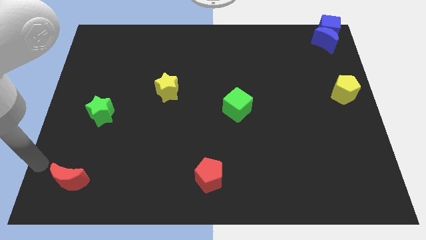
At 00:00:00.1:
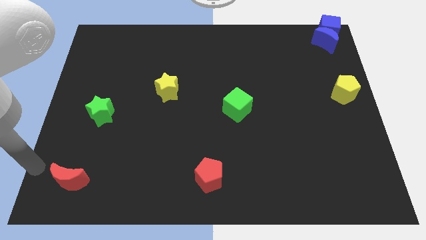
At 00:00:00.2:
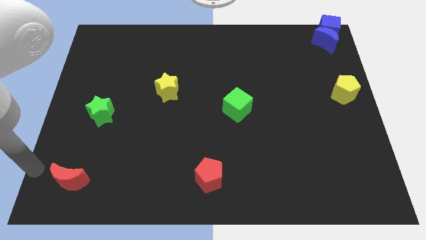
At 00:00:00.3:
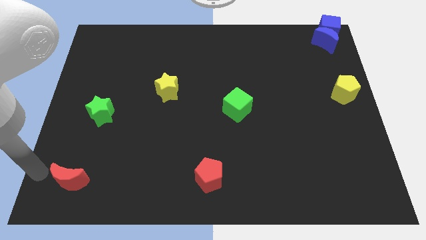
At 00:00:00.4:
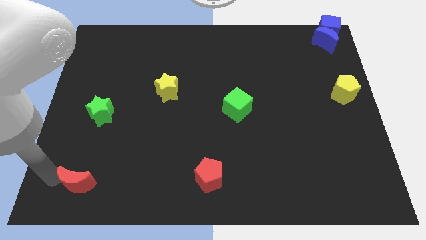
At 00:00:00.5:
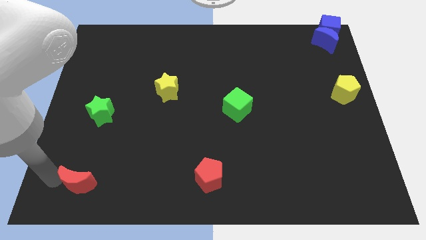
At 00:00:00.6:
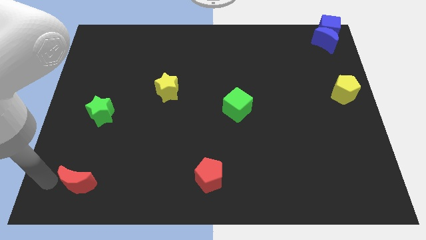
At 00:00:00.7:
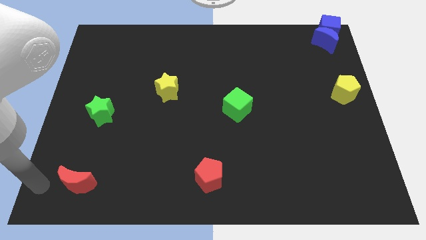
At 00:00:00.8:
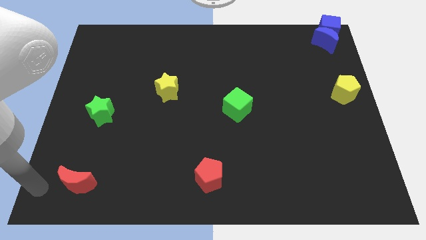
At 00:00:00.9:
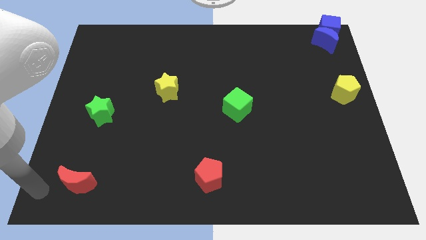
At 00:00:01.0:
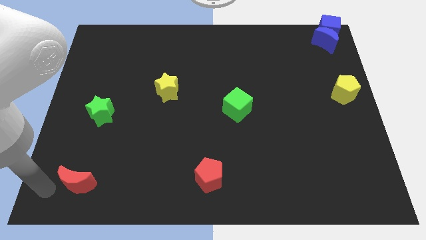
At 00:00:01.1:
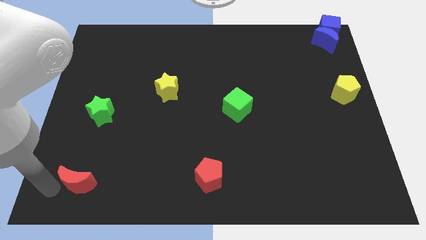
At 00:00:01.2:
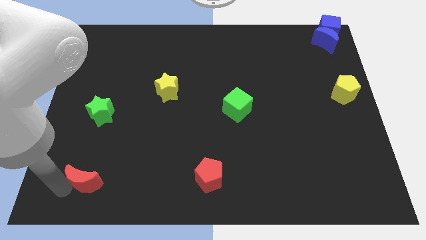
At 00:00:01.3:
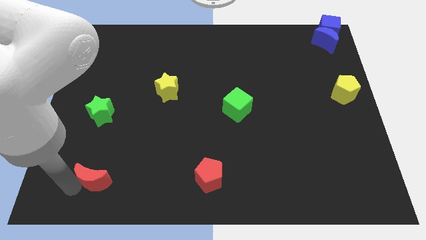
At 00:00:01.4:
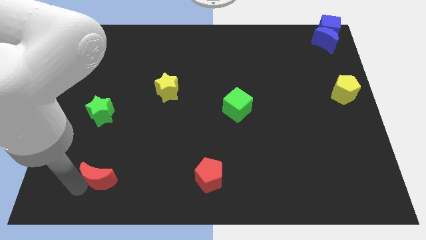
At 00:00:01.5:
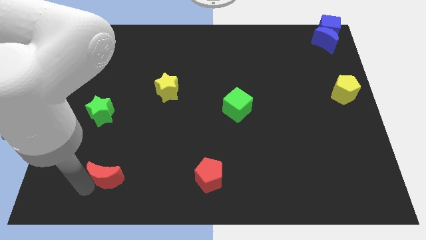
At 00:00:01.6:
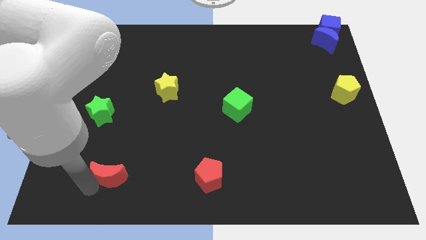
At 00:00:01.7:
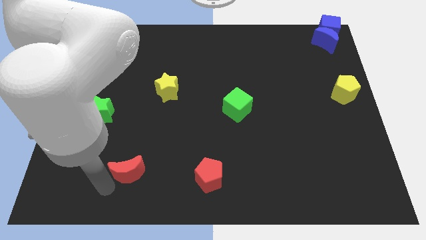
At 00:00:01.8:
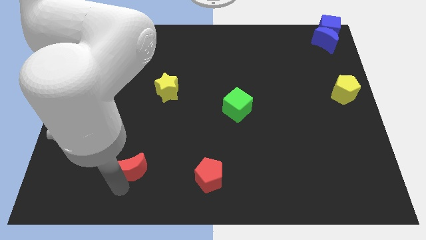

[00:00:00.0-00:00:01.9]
place red moon to the left of red pentagon

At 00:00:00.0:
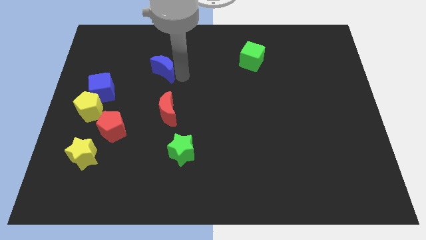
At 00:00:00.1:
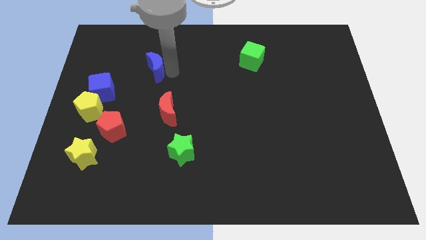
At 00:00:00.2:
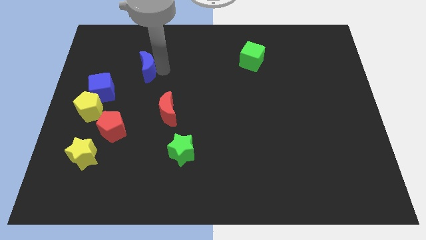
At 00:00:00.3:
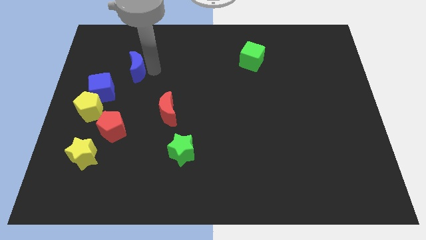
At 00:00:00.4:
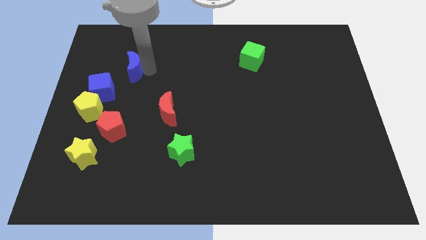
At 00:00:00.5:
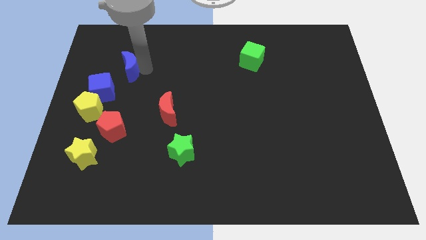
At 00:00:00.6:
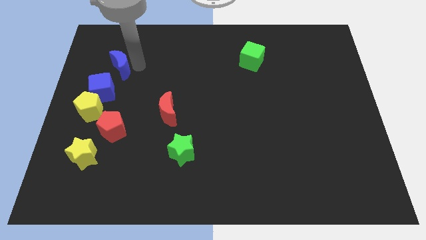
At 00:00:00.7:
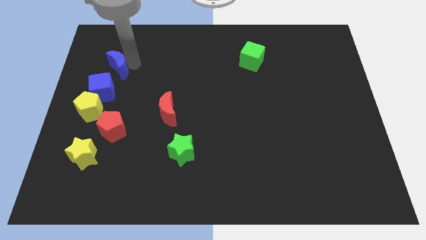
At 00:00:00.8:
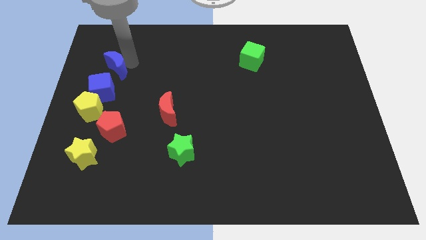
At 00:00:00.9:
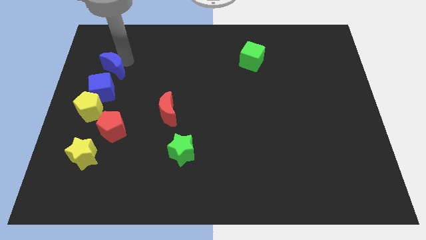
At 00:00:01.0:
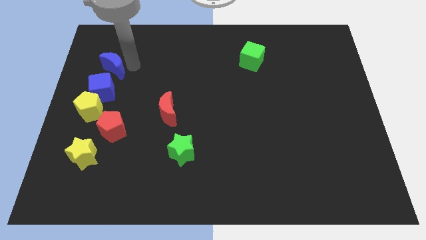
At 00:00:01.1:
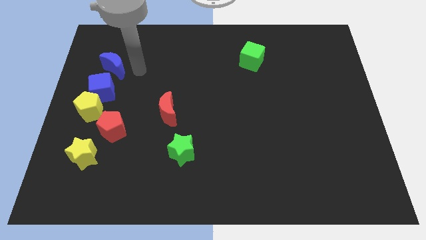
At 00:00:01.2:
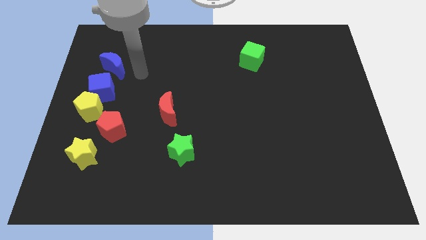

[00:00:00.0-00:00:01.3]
push the blue crescent vertically above the red pentagon

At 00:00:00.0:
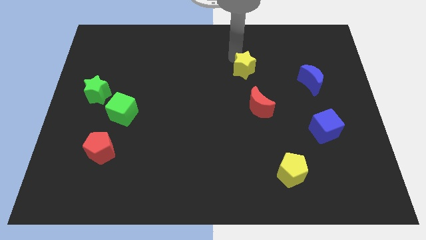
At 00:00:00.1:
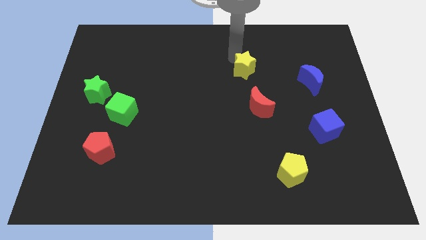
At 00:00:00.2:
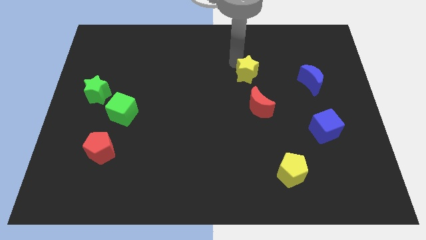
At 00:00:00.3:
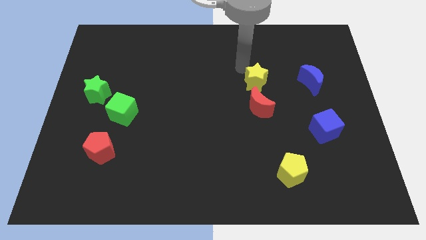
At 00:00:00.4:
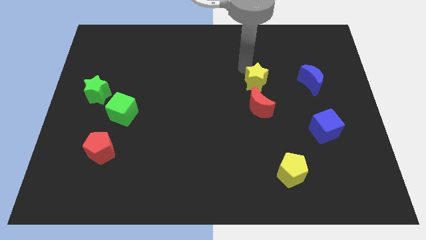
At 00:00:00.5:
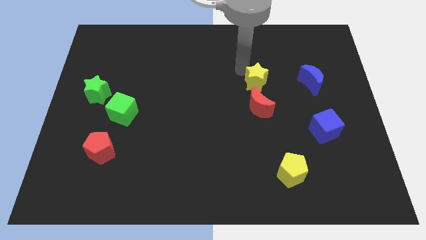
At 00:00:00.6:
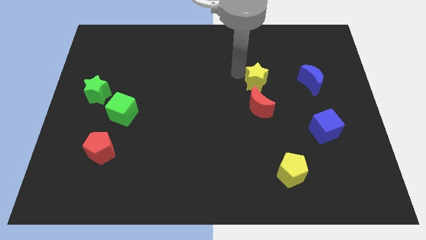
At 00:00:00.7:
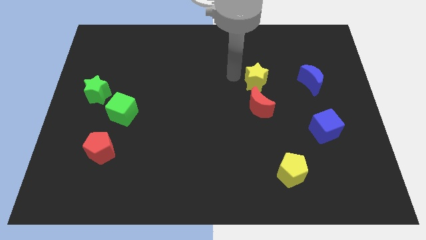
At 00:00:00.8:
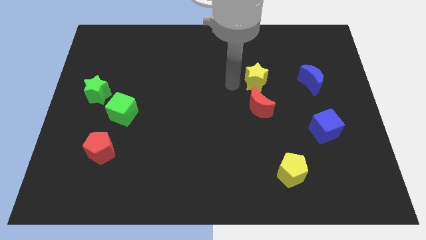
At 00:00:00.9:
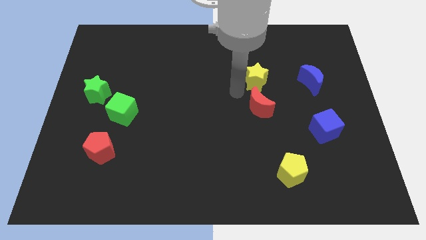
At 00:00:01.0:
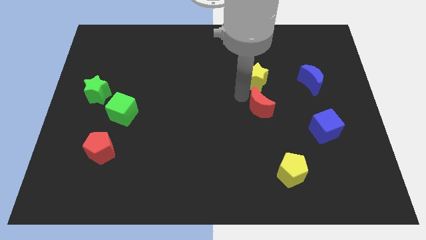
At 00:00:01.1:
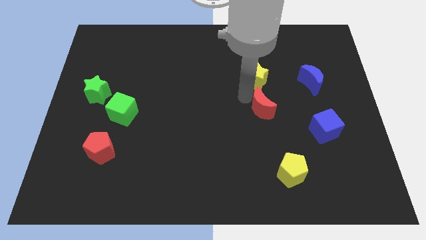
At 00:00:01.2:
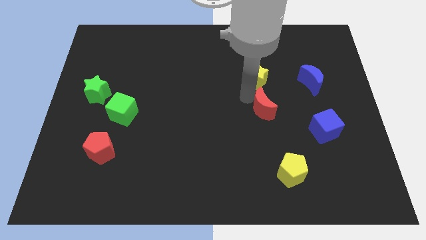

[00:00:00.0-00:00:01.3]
push the yellow star close to red moon

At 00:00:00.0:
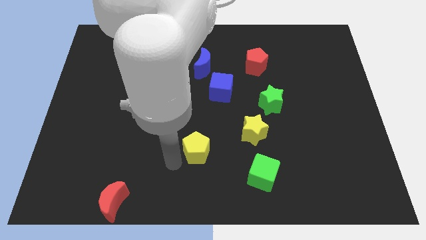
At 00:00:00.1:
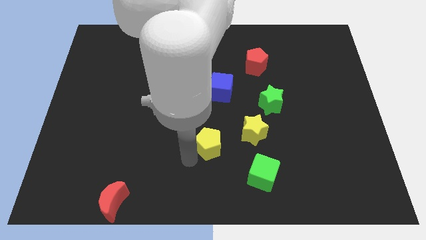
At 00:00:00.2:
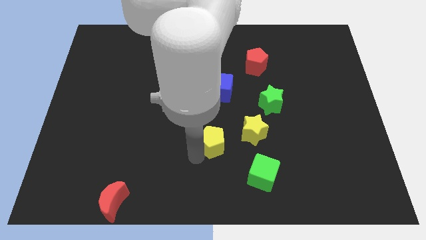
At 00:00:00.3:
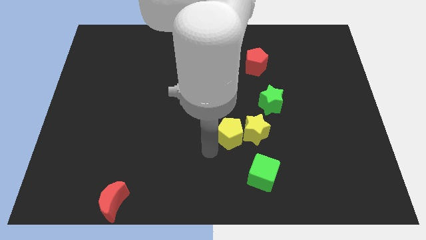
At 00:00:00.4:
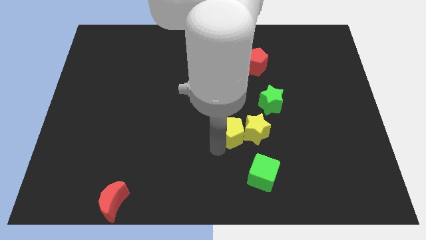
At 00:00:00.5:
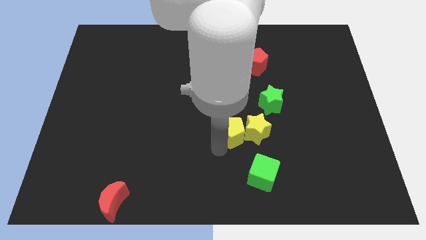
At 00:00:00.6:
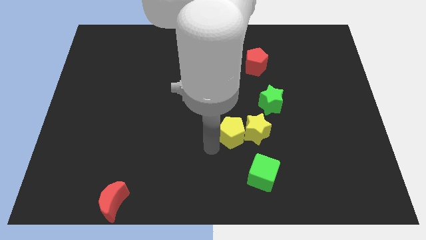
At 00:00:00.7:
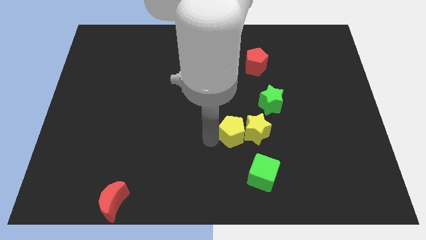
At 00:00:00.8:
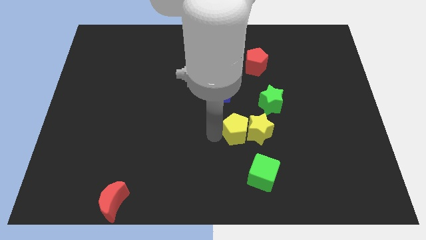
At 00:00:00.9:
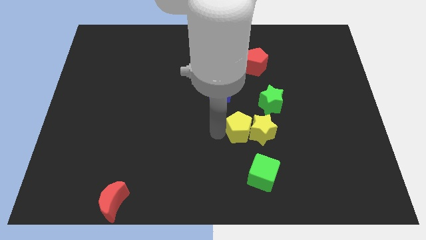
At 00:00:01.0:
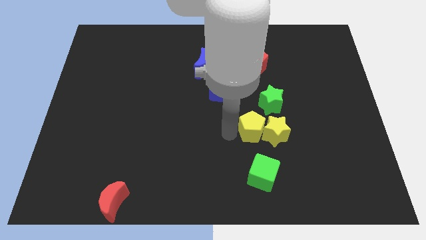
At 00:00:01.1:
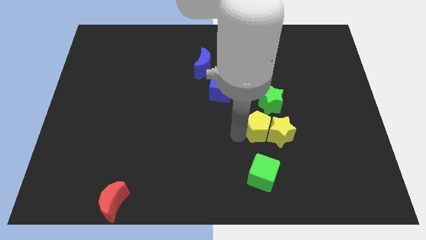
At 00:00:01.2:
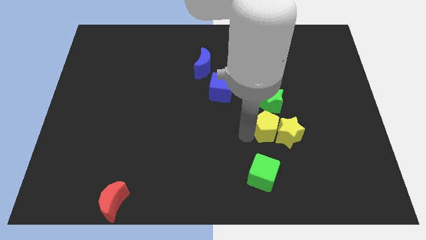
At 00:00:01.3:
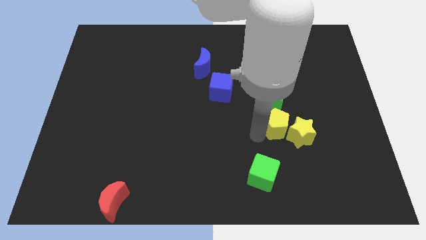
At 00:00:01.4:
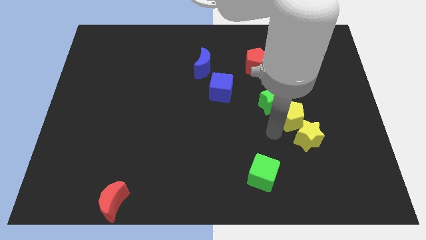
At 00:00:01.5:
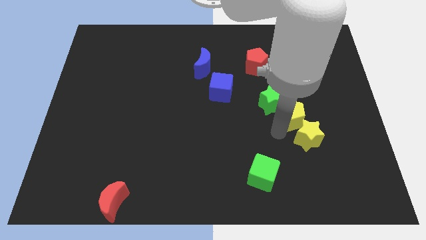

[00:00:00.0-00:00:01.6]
push the yellow pentagon along with yellow star to right

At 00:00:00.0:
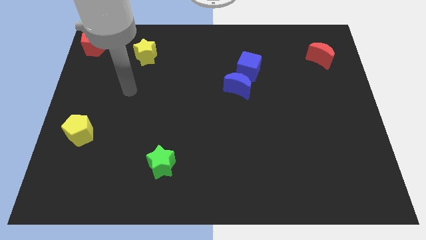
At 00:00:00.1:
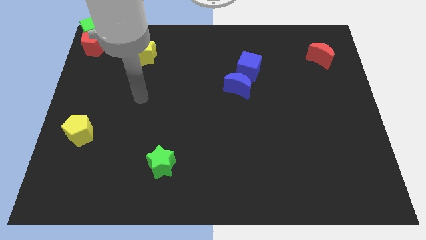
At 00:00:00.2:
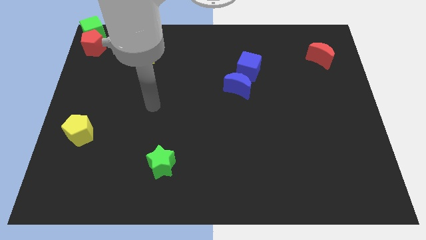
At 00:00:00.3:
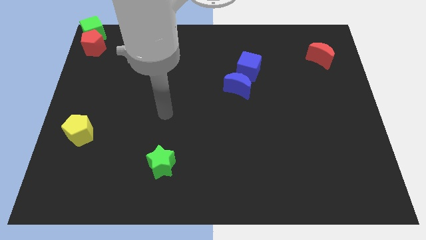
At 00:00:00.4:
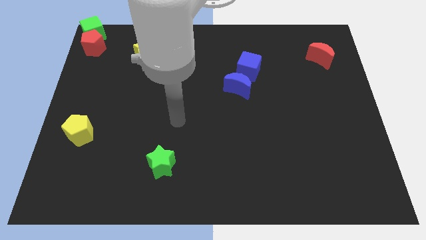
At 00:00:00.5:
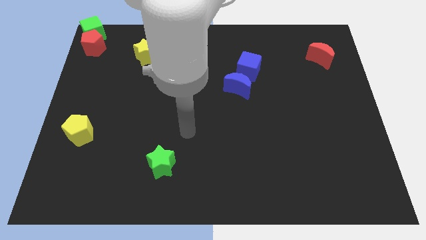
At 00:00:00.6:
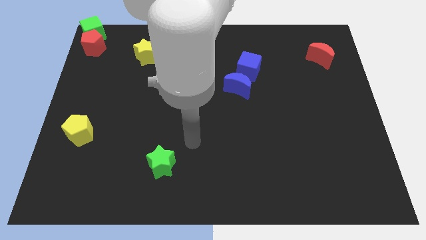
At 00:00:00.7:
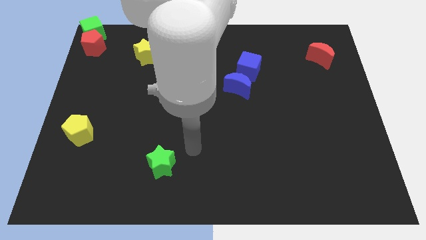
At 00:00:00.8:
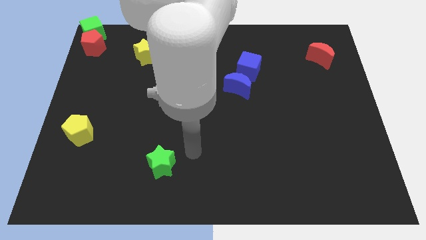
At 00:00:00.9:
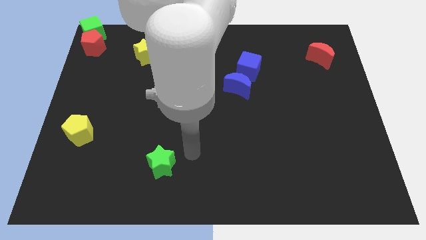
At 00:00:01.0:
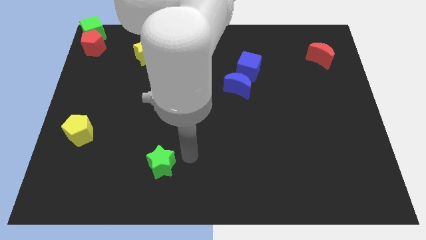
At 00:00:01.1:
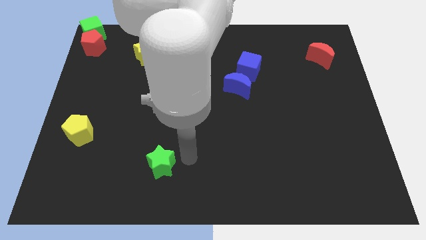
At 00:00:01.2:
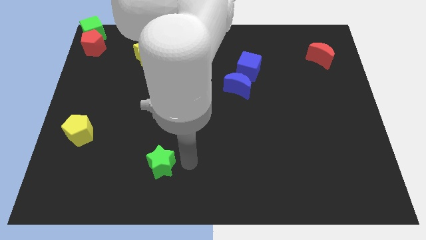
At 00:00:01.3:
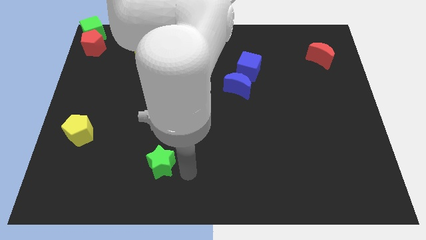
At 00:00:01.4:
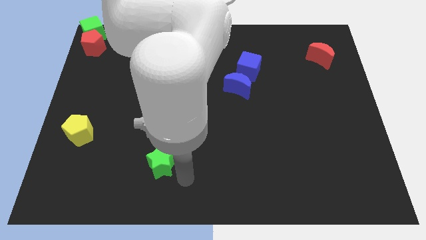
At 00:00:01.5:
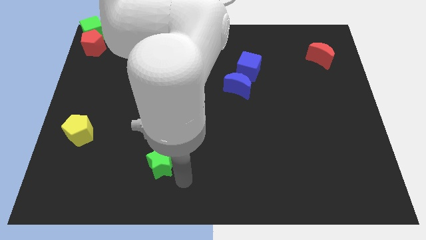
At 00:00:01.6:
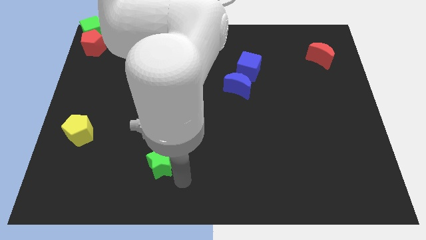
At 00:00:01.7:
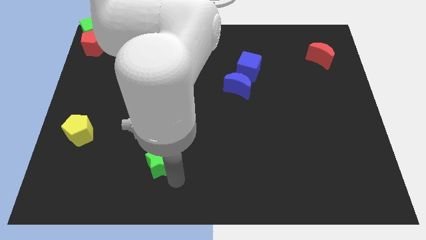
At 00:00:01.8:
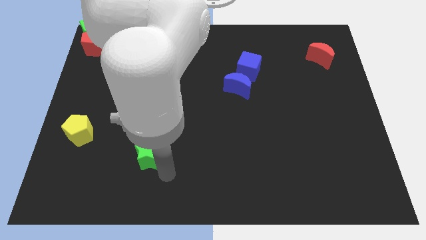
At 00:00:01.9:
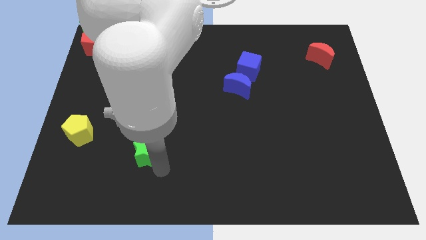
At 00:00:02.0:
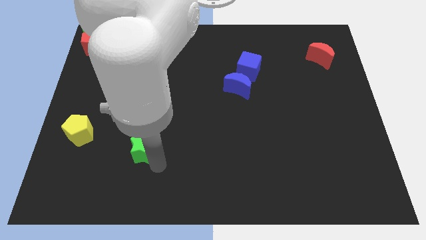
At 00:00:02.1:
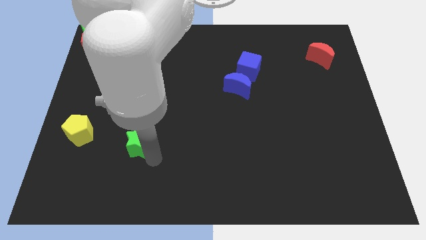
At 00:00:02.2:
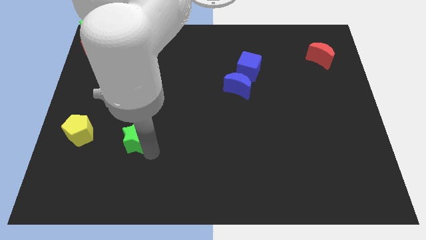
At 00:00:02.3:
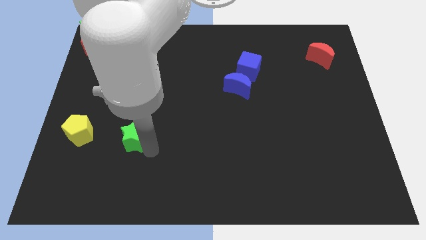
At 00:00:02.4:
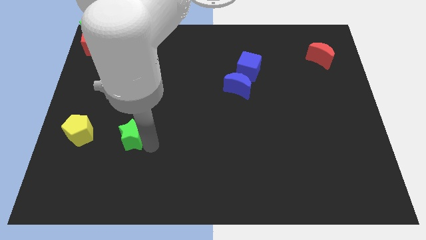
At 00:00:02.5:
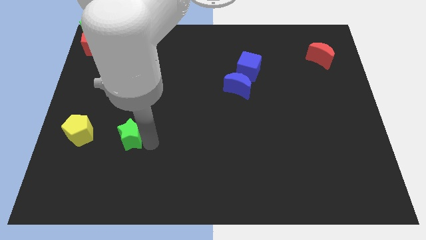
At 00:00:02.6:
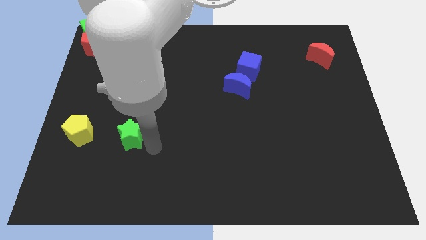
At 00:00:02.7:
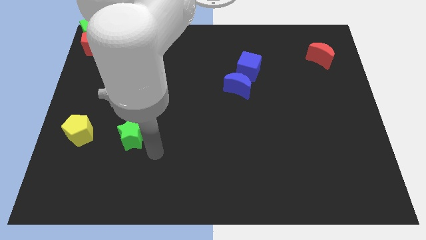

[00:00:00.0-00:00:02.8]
move the green star to the right of yellow pentagon
